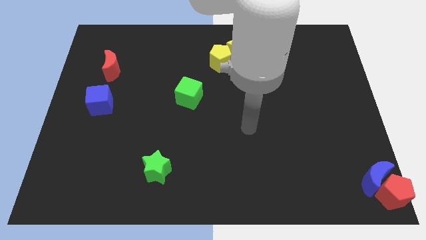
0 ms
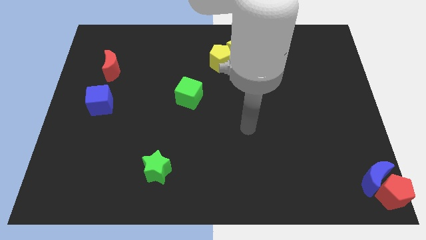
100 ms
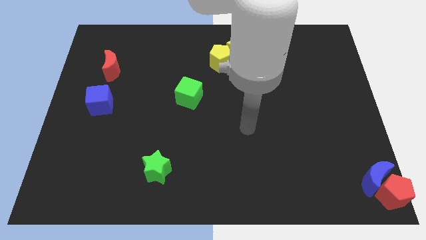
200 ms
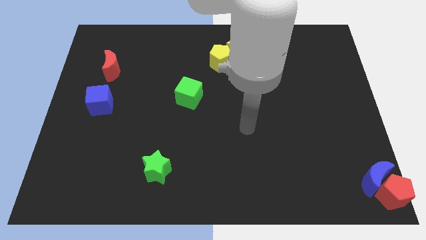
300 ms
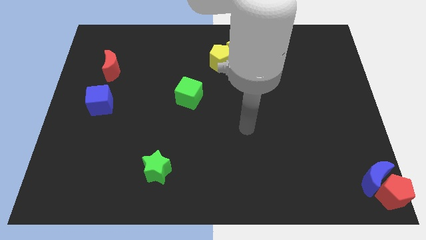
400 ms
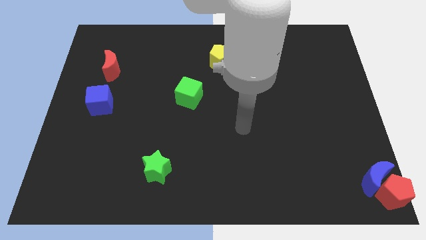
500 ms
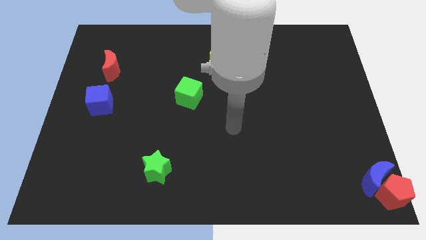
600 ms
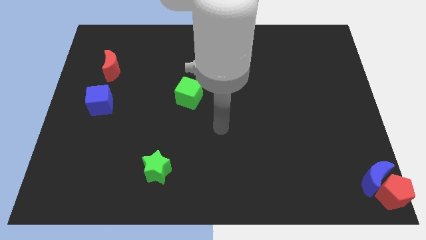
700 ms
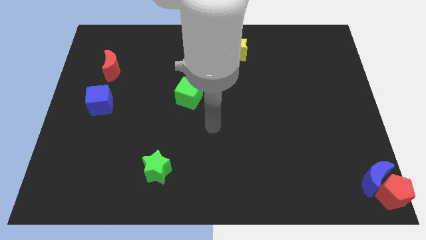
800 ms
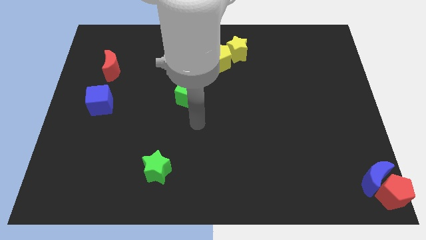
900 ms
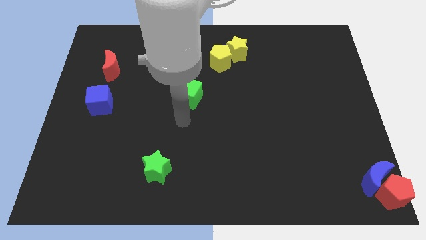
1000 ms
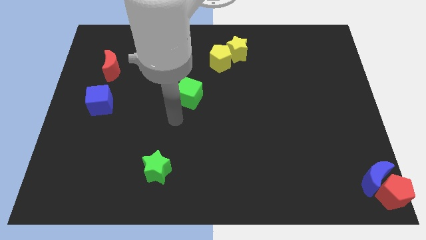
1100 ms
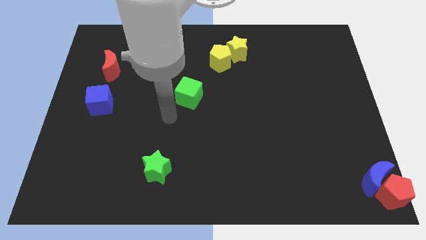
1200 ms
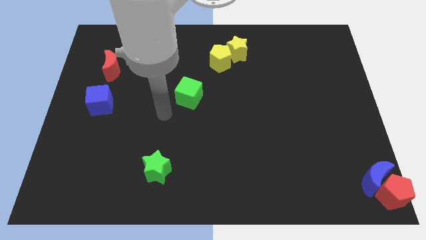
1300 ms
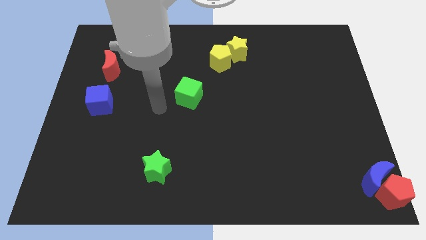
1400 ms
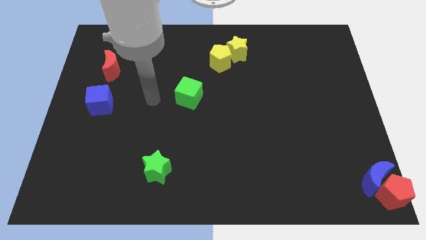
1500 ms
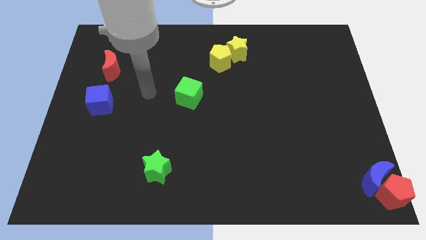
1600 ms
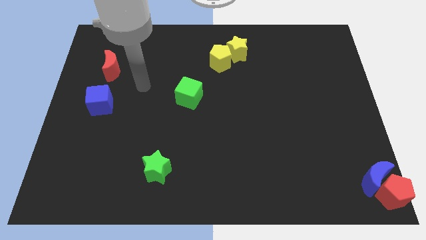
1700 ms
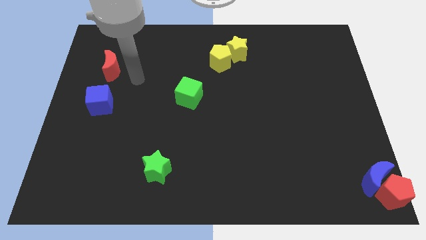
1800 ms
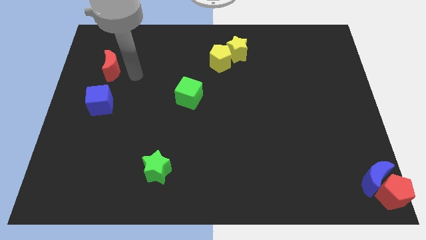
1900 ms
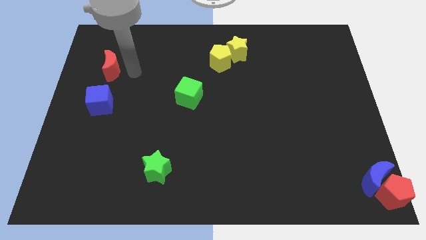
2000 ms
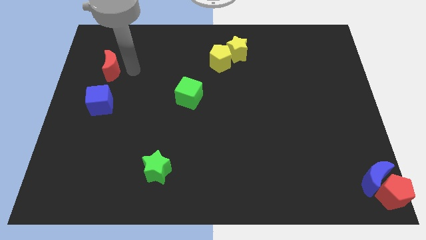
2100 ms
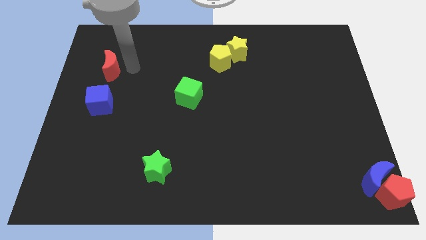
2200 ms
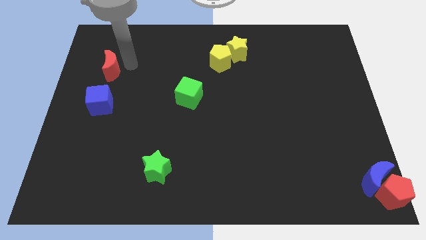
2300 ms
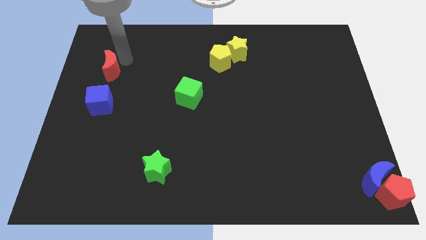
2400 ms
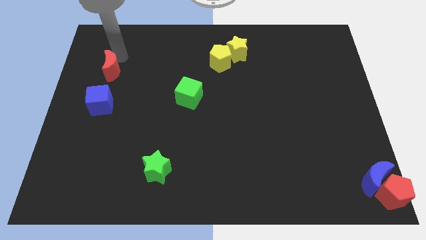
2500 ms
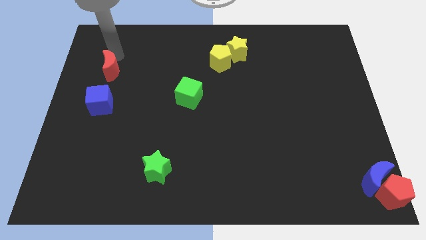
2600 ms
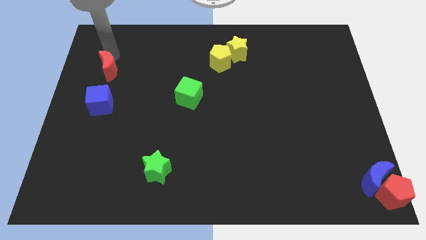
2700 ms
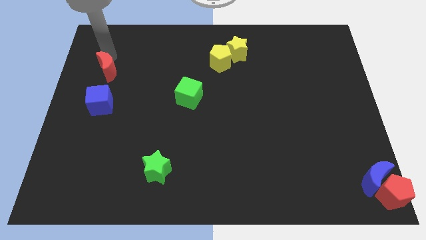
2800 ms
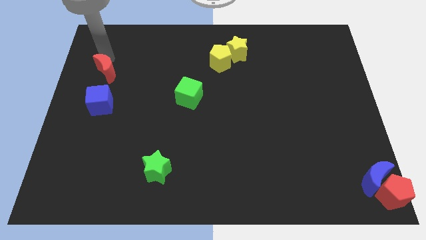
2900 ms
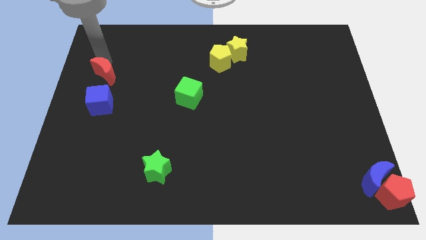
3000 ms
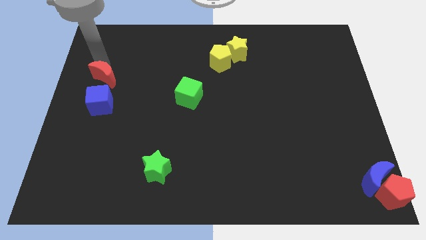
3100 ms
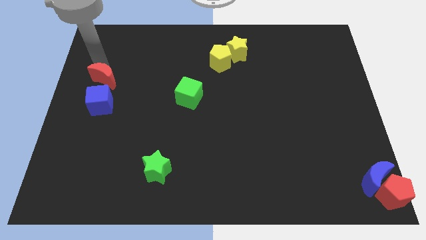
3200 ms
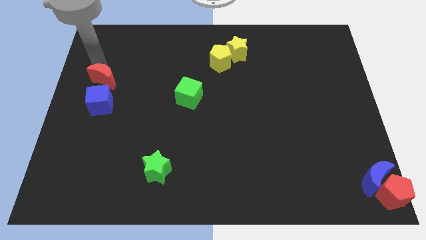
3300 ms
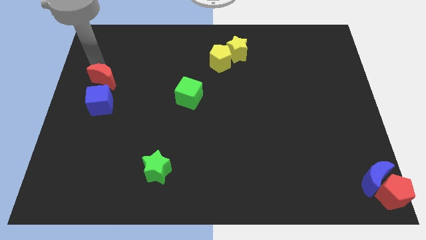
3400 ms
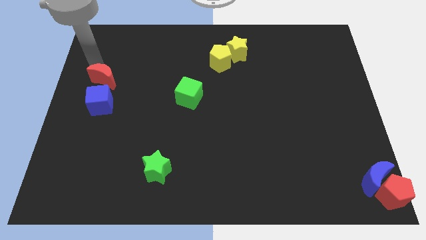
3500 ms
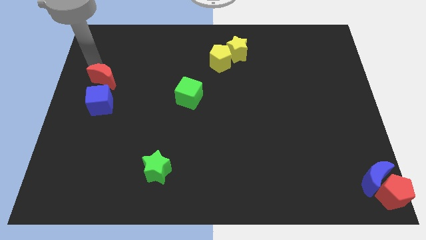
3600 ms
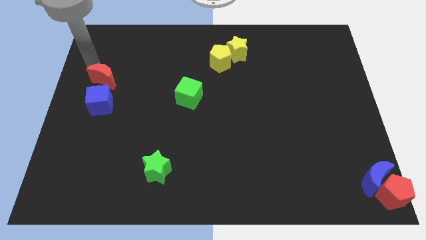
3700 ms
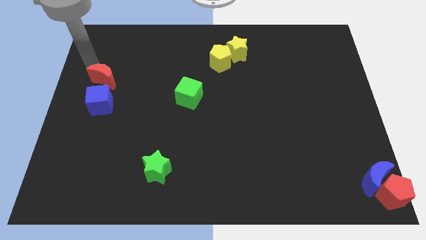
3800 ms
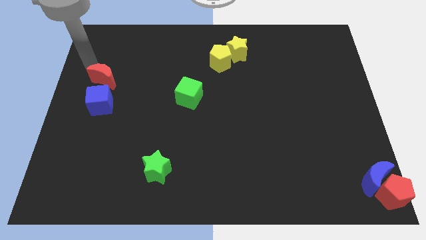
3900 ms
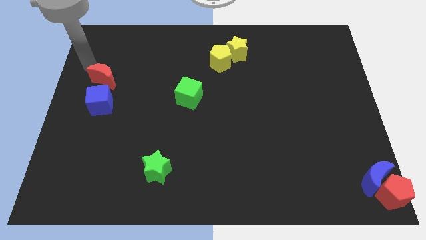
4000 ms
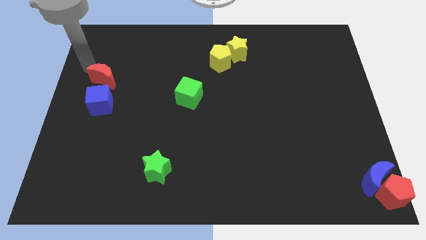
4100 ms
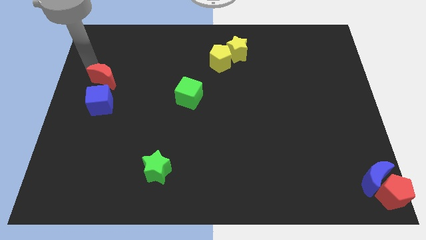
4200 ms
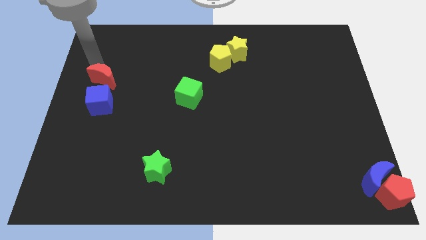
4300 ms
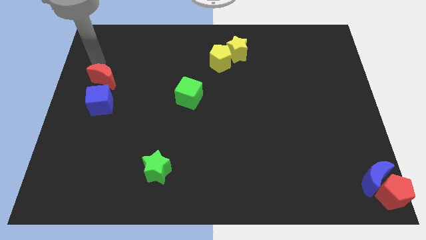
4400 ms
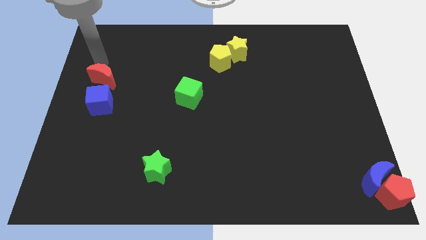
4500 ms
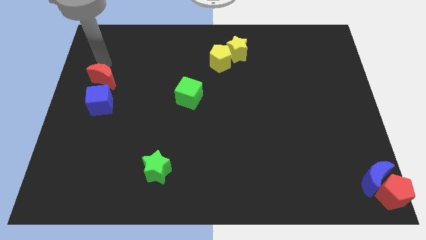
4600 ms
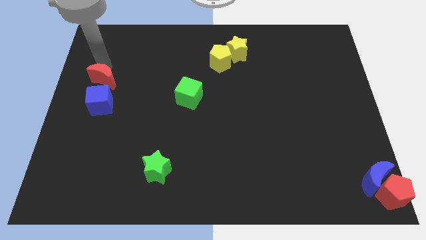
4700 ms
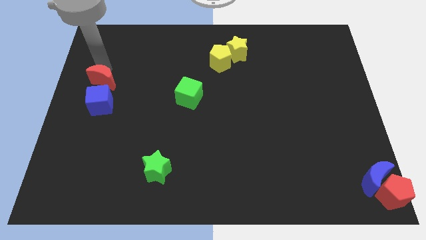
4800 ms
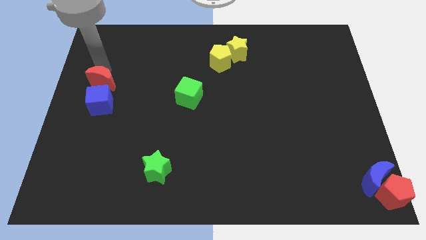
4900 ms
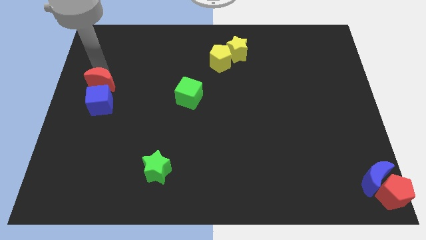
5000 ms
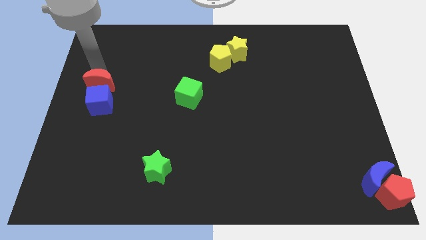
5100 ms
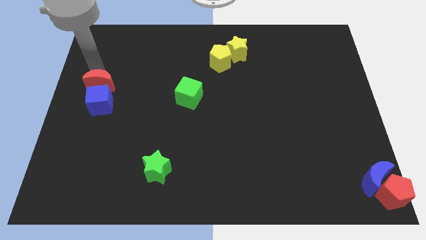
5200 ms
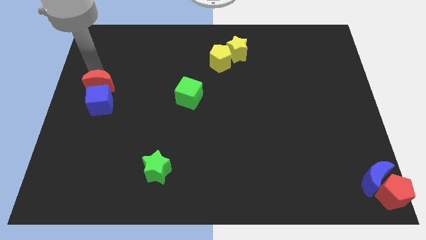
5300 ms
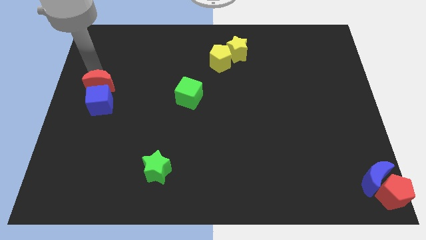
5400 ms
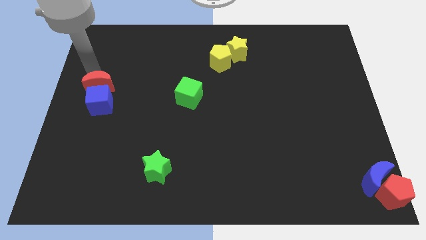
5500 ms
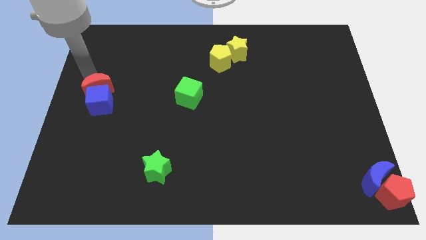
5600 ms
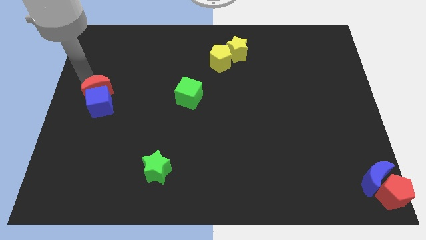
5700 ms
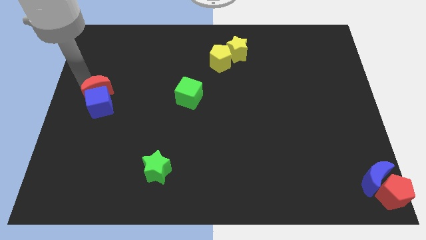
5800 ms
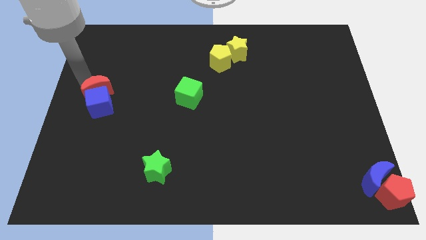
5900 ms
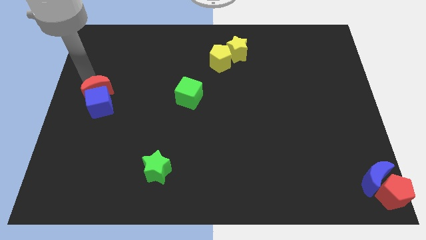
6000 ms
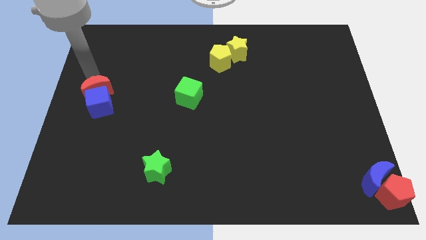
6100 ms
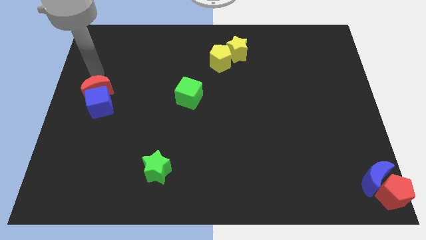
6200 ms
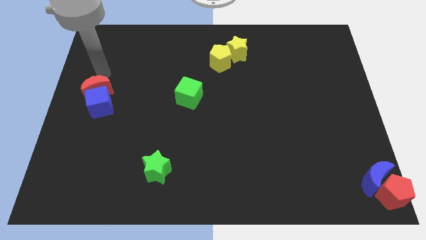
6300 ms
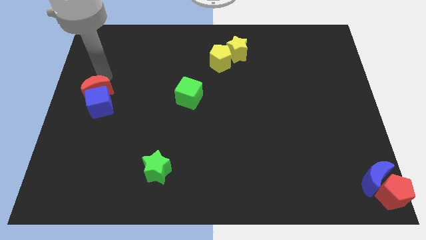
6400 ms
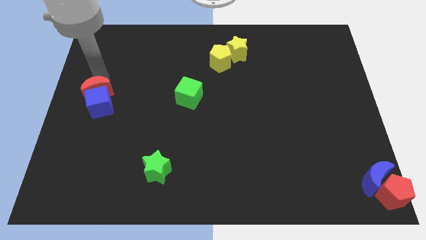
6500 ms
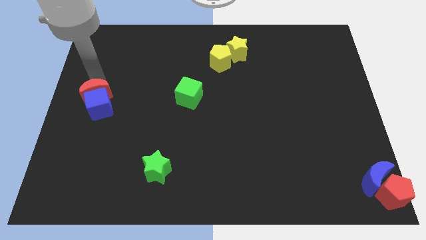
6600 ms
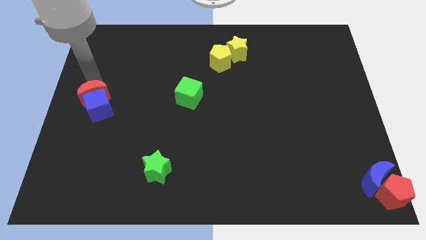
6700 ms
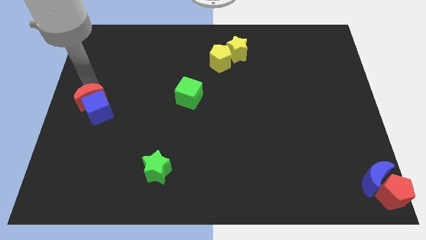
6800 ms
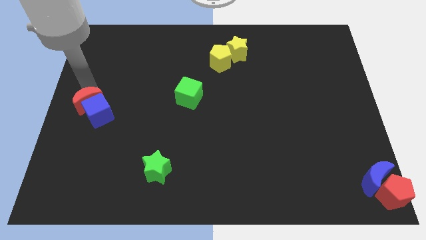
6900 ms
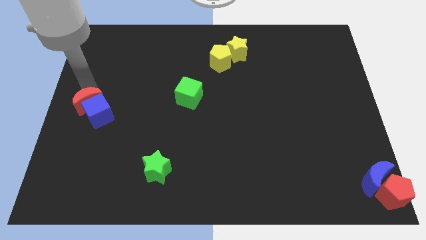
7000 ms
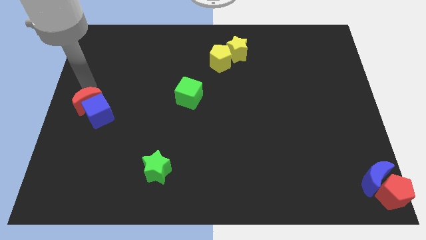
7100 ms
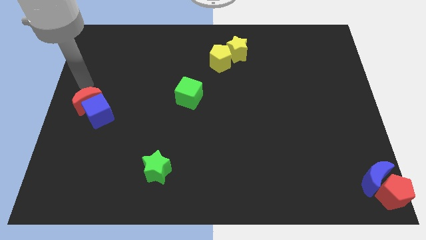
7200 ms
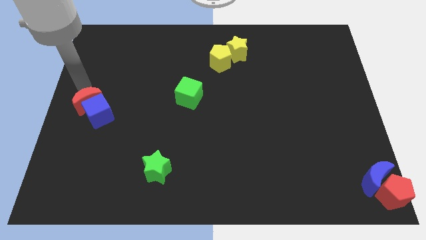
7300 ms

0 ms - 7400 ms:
push the red moon into the blue cube

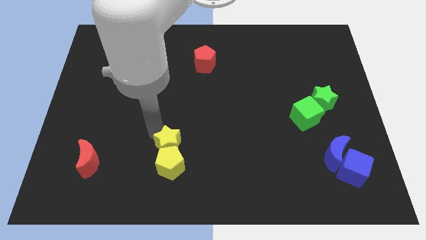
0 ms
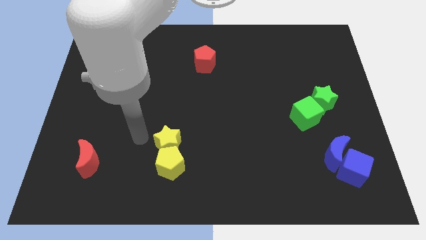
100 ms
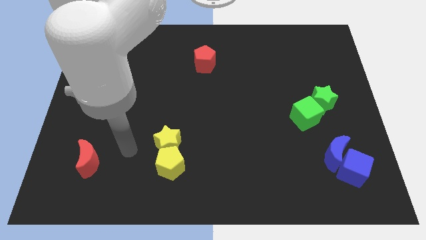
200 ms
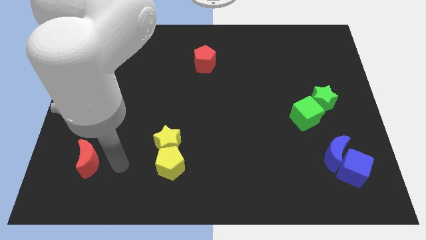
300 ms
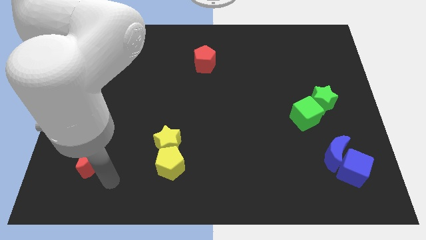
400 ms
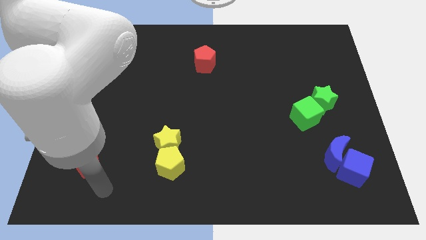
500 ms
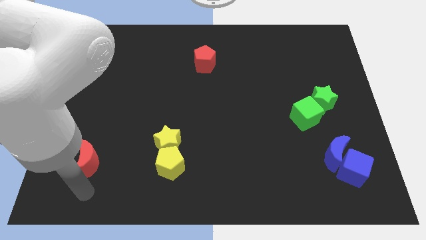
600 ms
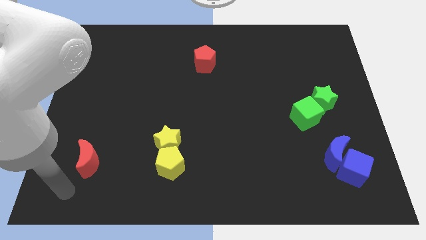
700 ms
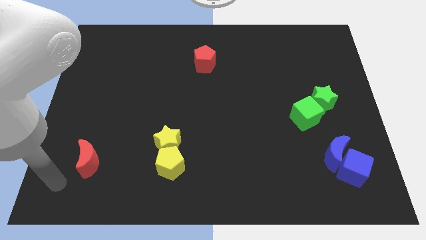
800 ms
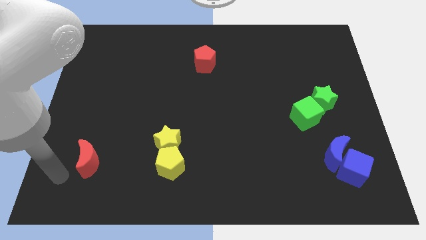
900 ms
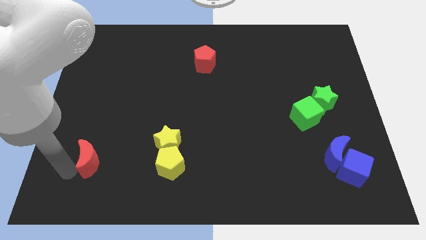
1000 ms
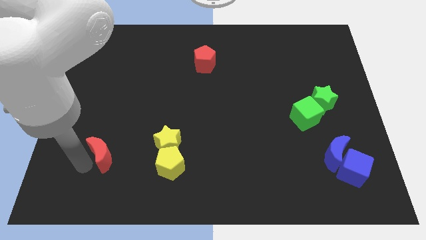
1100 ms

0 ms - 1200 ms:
point your arm at the left side of the red moon

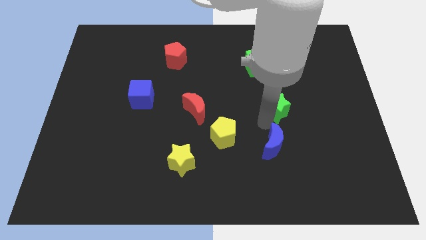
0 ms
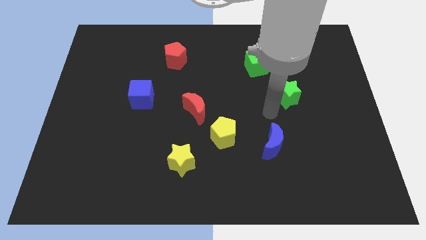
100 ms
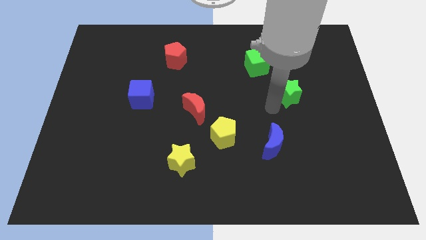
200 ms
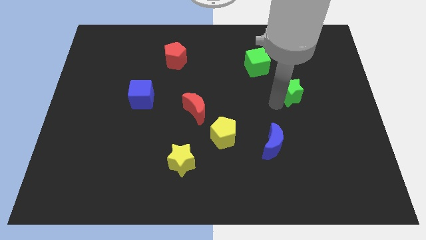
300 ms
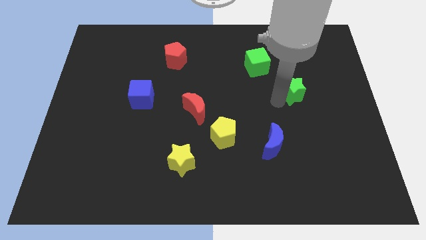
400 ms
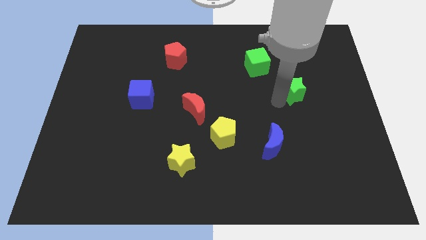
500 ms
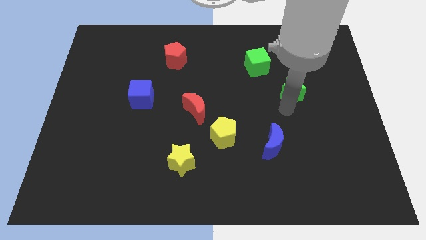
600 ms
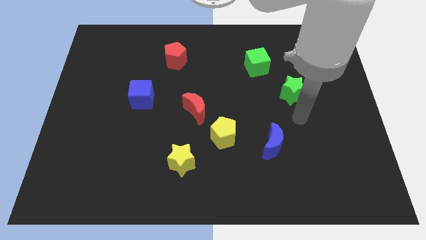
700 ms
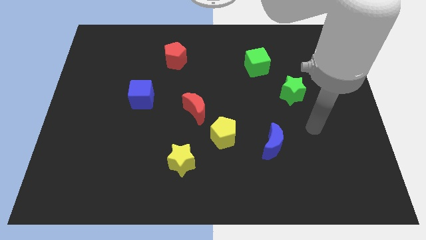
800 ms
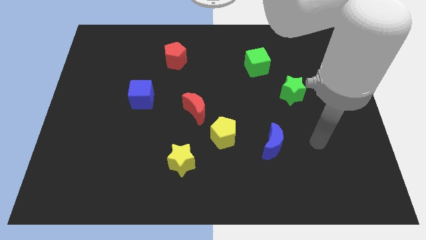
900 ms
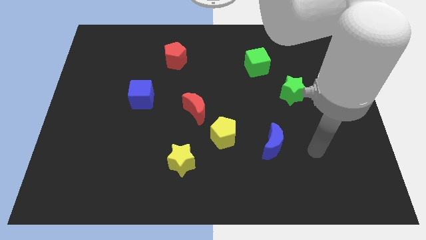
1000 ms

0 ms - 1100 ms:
separate green star from blue moon
